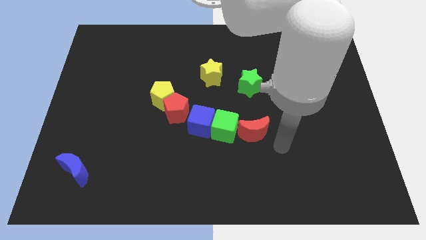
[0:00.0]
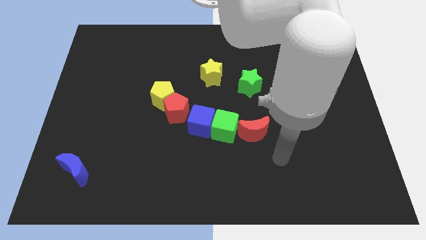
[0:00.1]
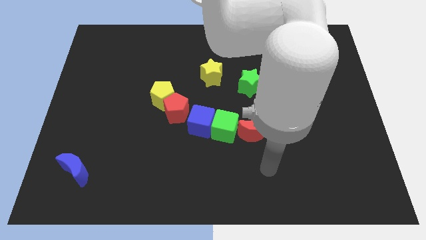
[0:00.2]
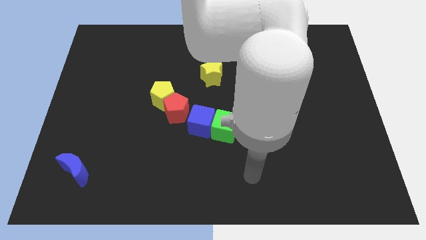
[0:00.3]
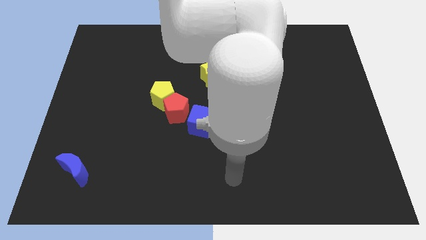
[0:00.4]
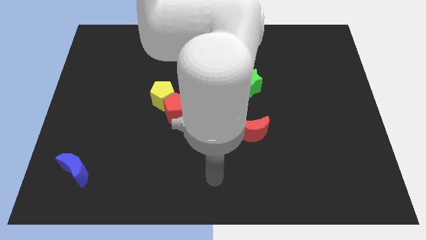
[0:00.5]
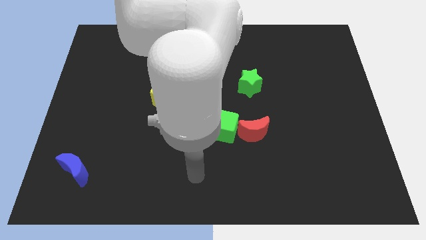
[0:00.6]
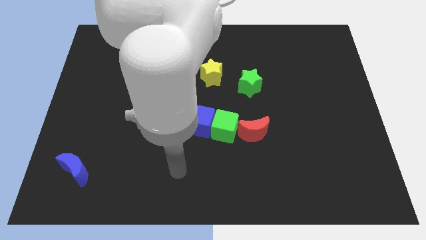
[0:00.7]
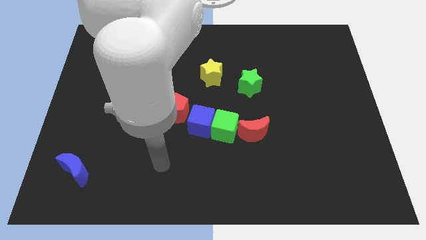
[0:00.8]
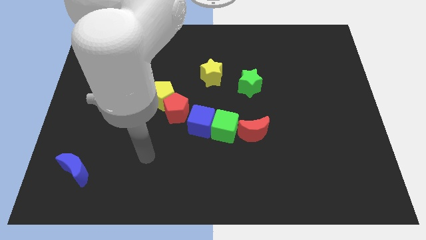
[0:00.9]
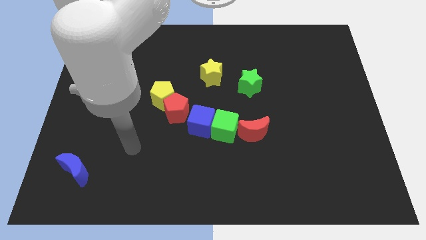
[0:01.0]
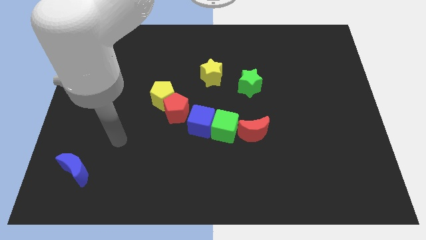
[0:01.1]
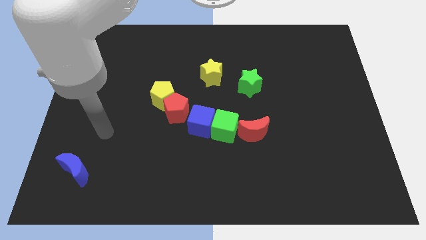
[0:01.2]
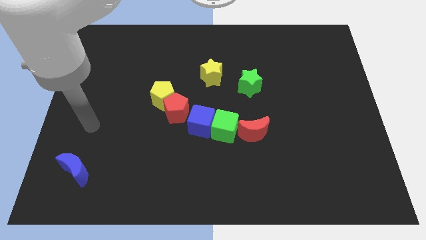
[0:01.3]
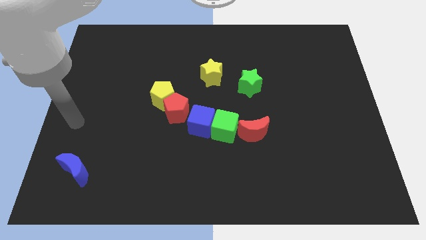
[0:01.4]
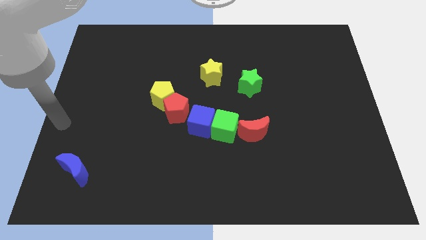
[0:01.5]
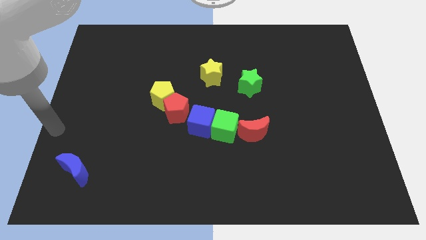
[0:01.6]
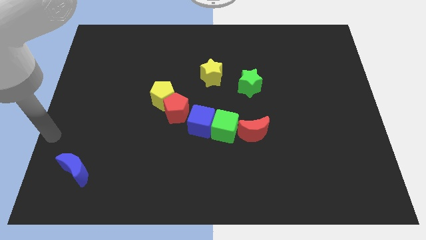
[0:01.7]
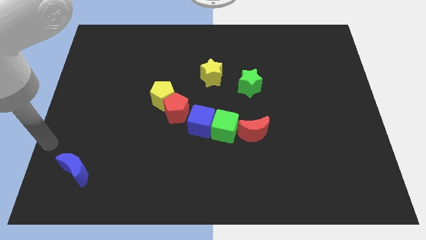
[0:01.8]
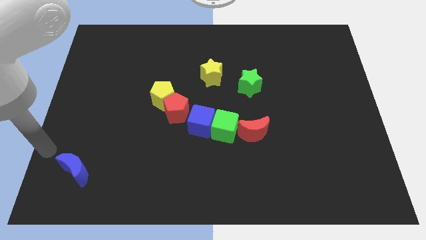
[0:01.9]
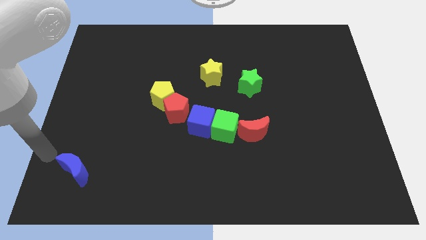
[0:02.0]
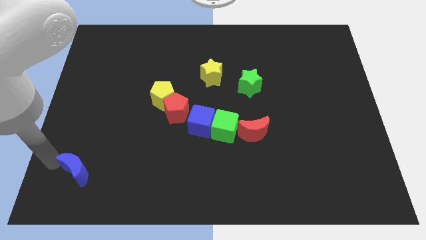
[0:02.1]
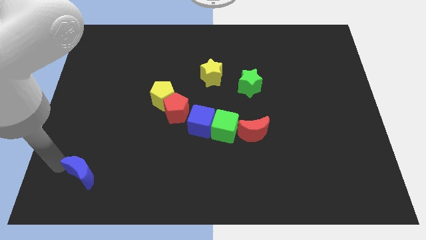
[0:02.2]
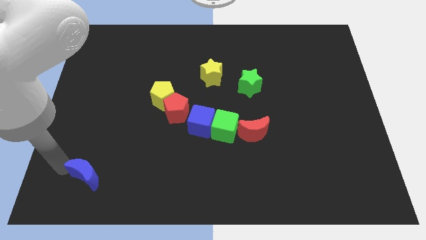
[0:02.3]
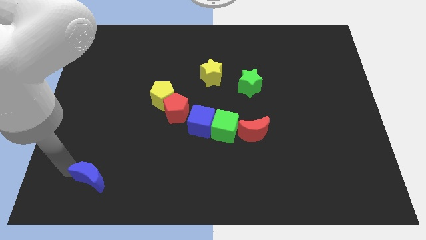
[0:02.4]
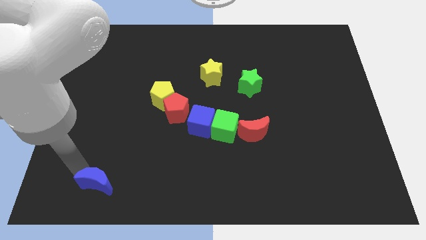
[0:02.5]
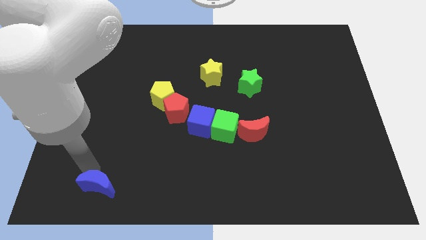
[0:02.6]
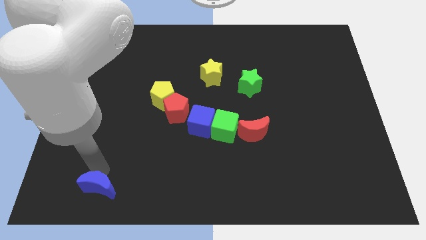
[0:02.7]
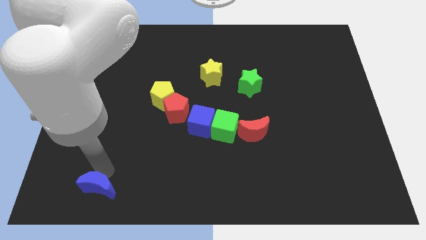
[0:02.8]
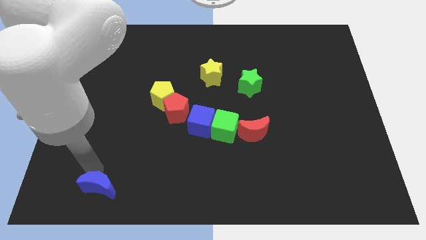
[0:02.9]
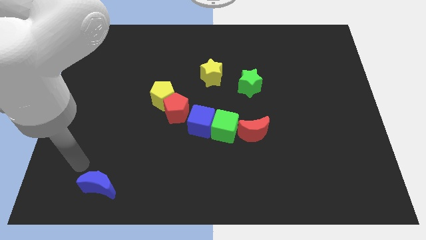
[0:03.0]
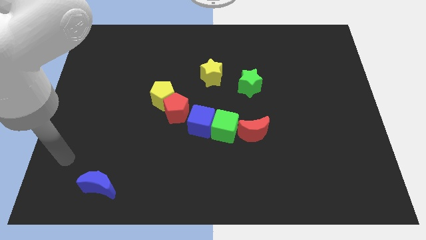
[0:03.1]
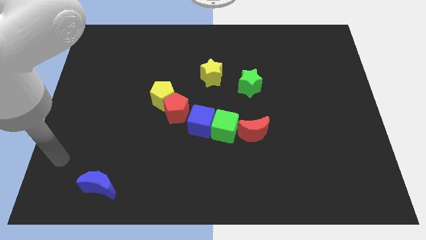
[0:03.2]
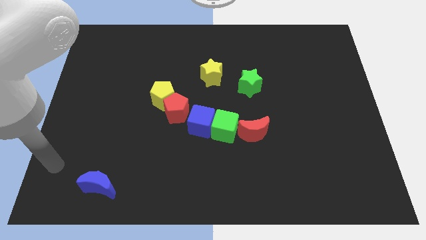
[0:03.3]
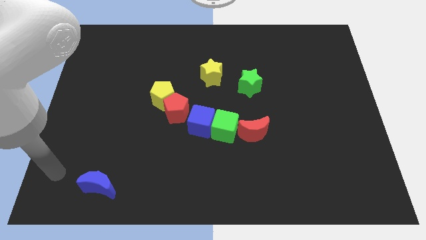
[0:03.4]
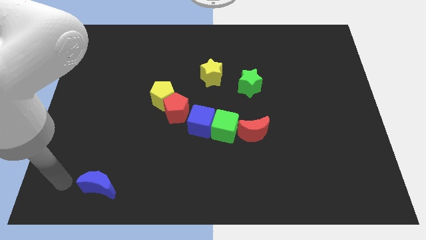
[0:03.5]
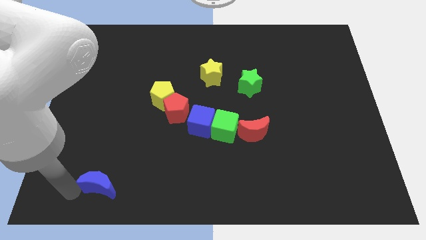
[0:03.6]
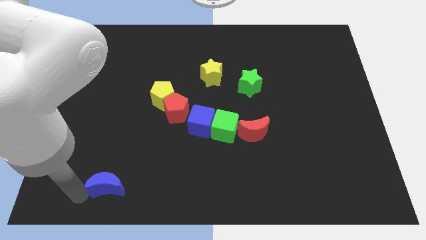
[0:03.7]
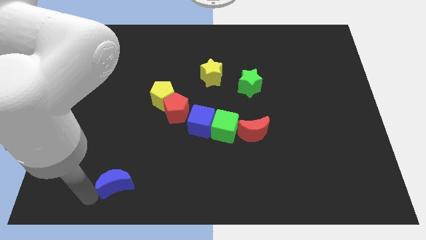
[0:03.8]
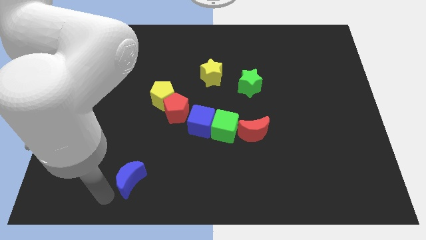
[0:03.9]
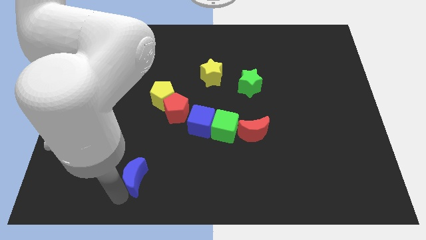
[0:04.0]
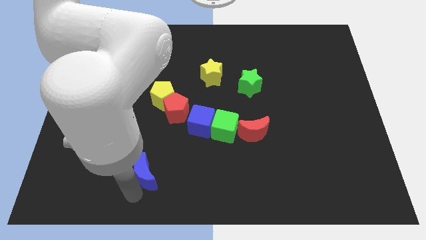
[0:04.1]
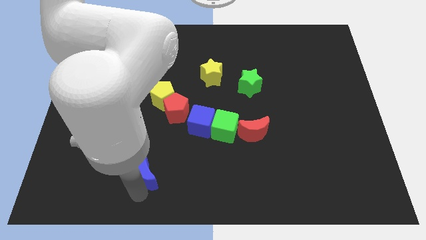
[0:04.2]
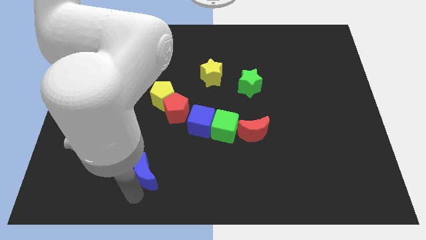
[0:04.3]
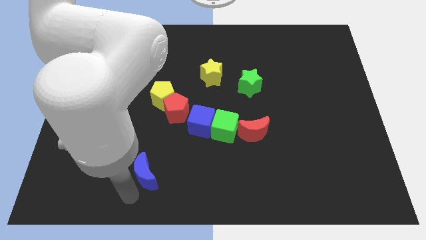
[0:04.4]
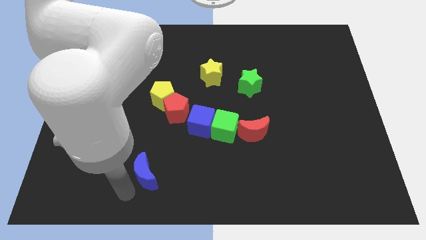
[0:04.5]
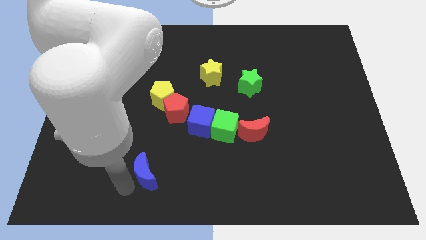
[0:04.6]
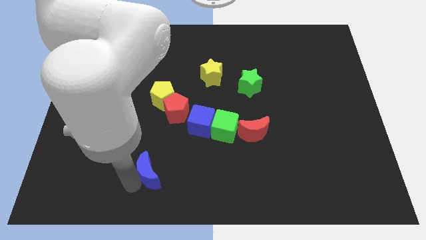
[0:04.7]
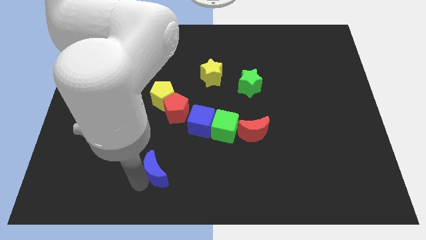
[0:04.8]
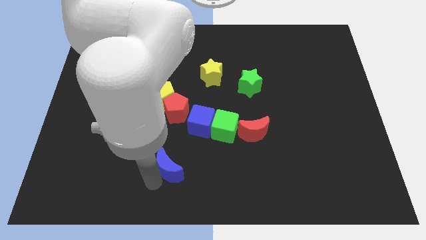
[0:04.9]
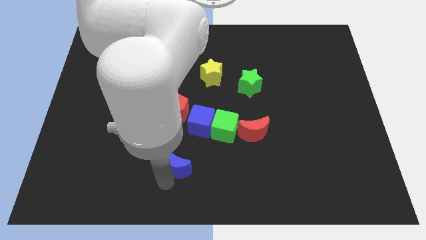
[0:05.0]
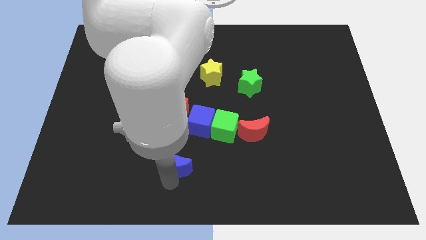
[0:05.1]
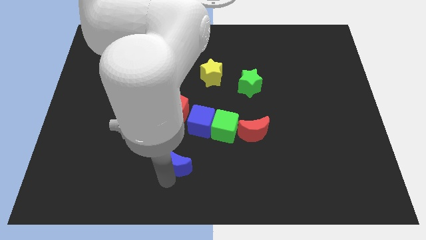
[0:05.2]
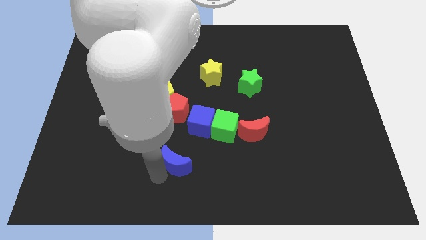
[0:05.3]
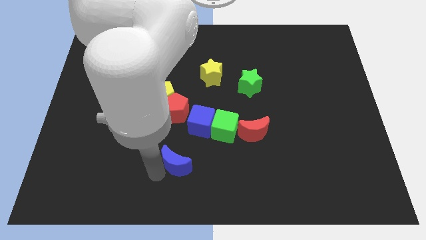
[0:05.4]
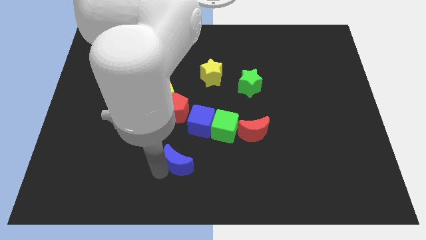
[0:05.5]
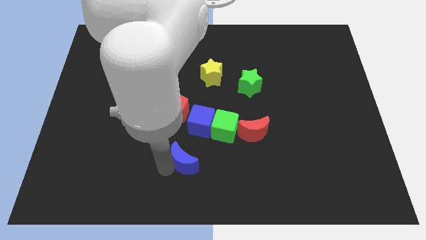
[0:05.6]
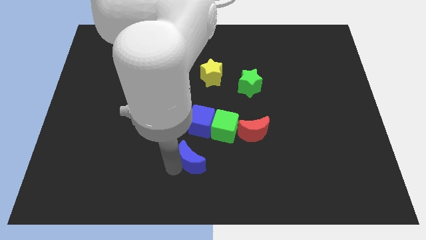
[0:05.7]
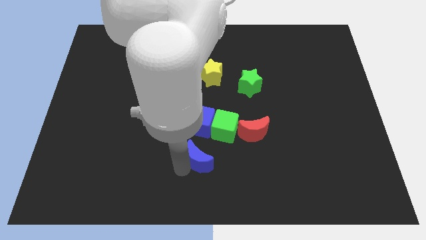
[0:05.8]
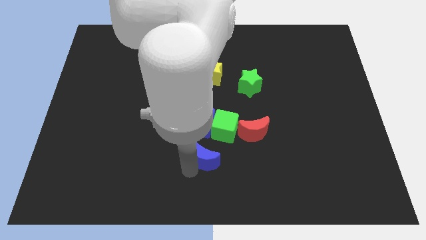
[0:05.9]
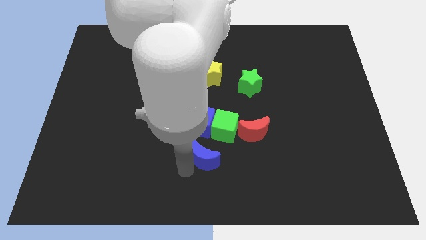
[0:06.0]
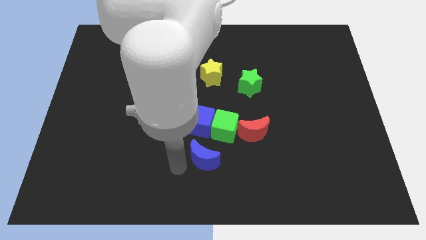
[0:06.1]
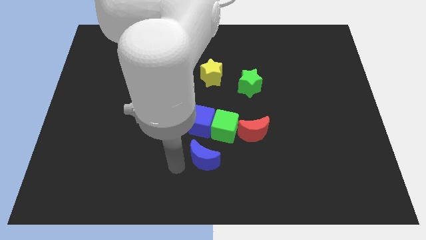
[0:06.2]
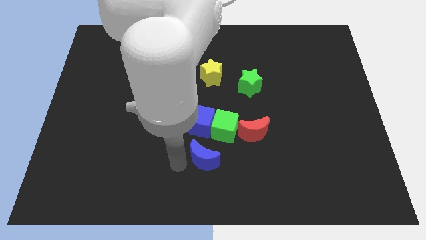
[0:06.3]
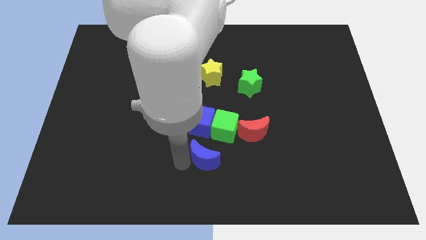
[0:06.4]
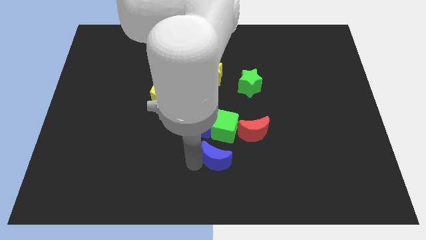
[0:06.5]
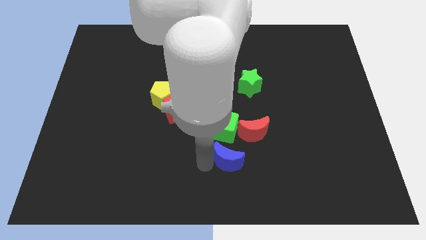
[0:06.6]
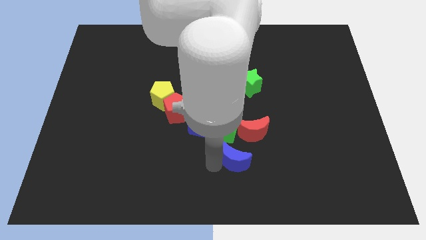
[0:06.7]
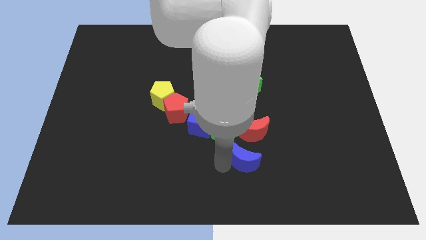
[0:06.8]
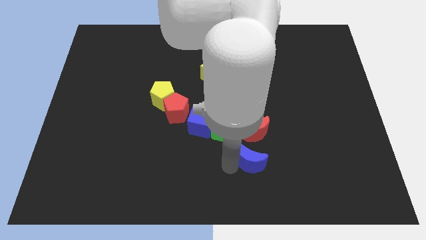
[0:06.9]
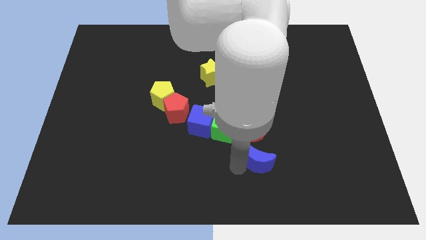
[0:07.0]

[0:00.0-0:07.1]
drag the blue moon towards the group of blocks

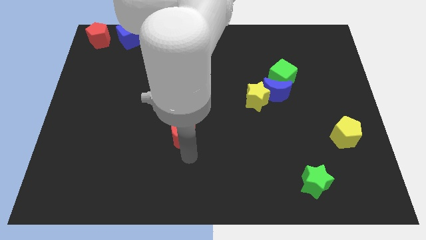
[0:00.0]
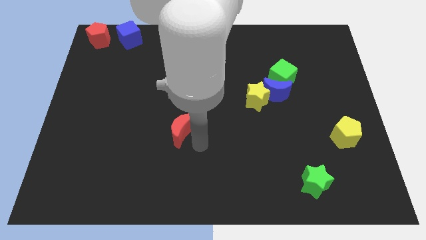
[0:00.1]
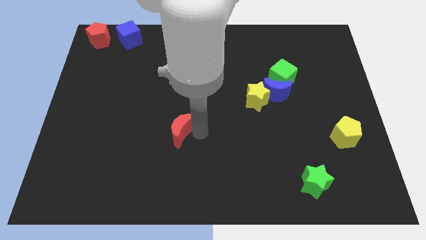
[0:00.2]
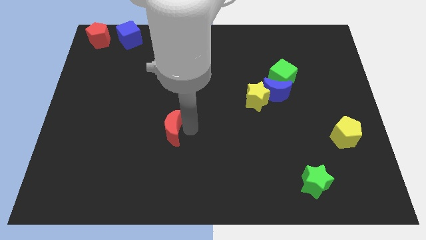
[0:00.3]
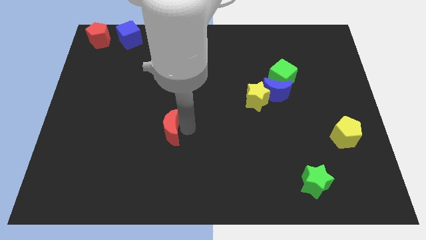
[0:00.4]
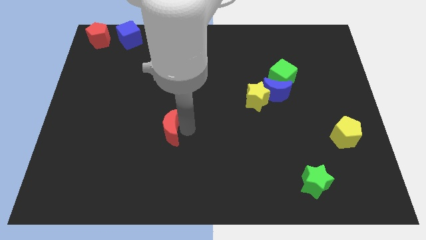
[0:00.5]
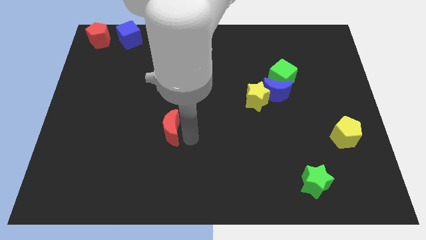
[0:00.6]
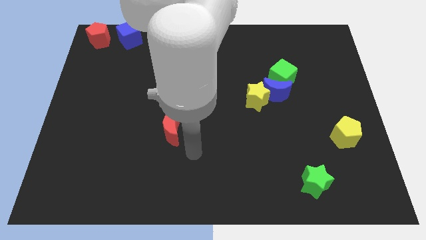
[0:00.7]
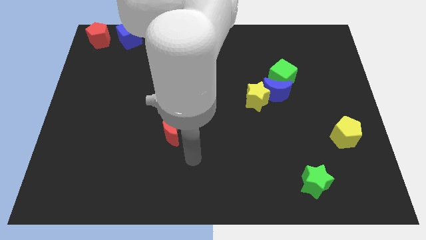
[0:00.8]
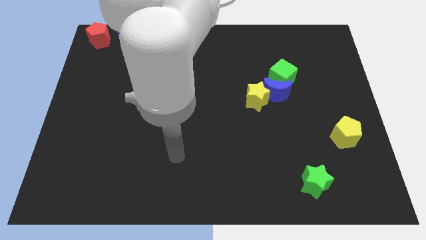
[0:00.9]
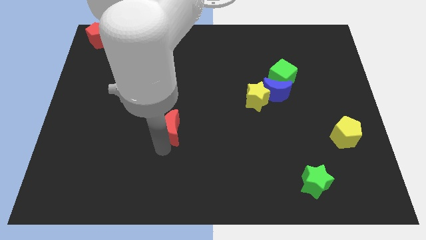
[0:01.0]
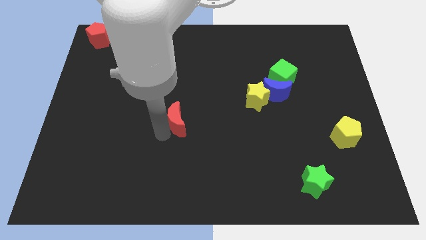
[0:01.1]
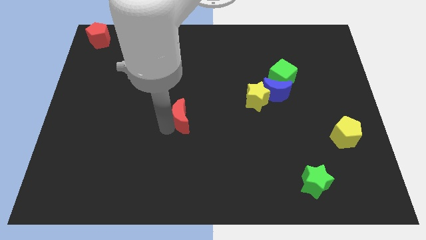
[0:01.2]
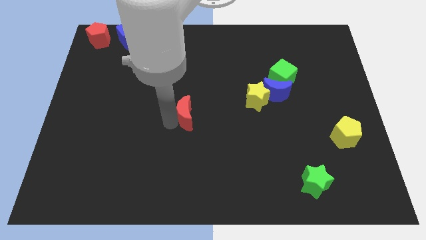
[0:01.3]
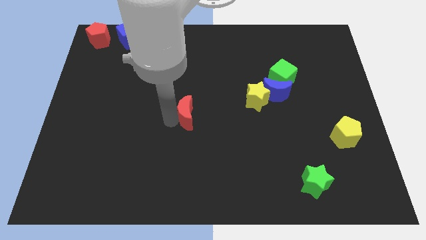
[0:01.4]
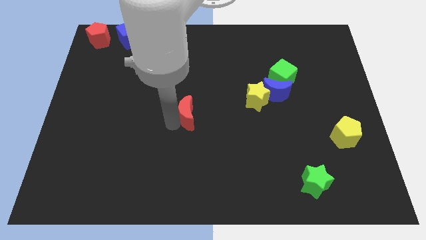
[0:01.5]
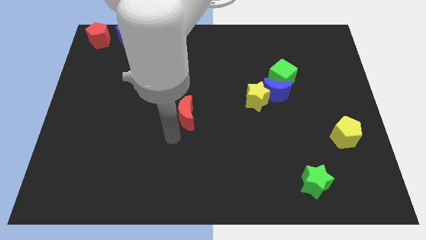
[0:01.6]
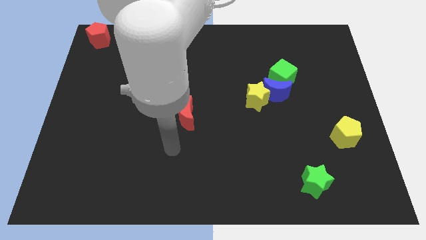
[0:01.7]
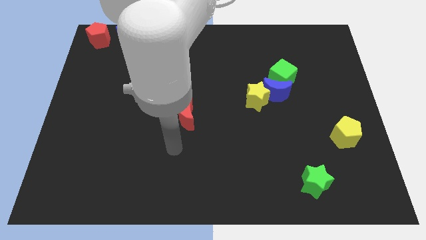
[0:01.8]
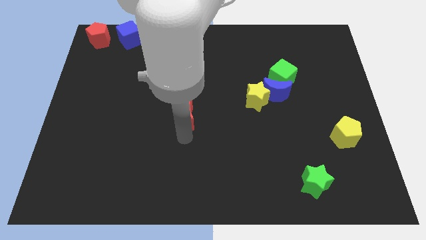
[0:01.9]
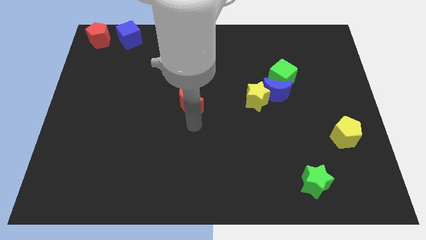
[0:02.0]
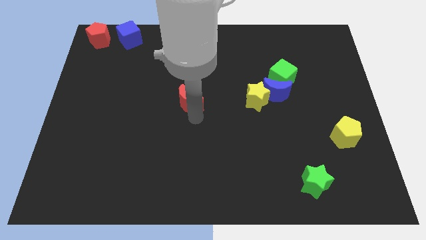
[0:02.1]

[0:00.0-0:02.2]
place the red crescent at center of the board
